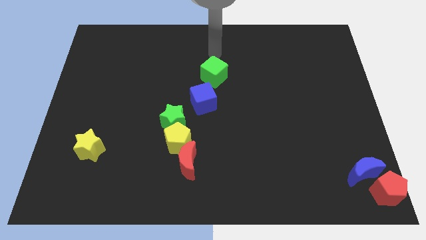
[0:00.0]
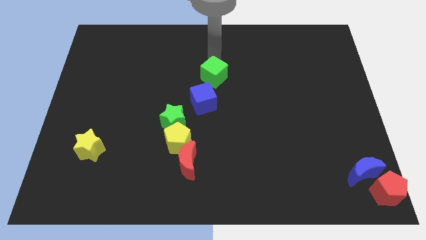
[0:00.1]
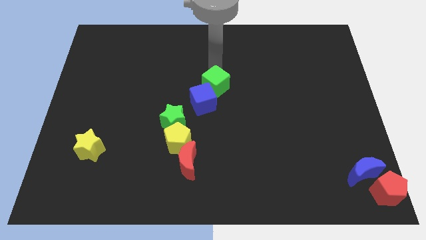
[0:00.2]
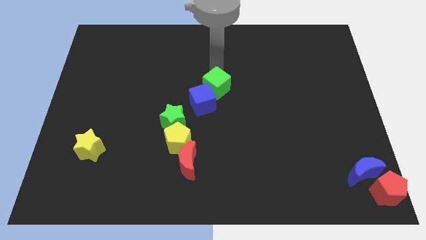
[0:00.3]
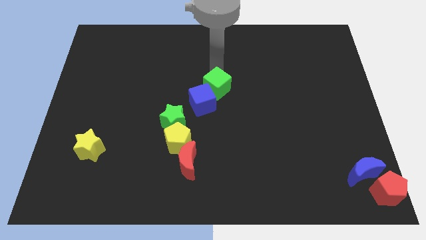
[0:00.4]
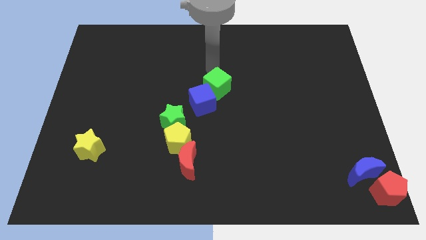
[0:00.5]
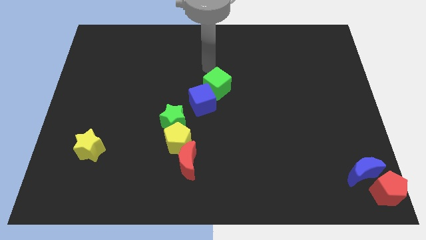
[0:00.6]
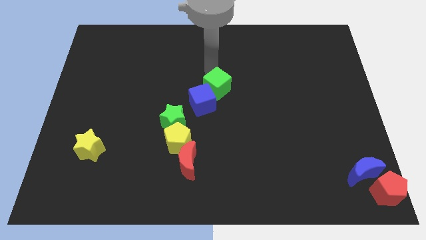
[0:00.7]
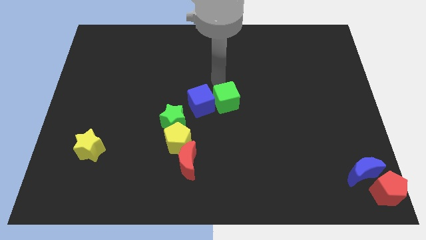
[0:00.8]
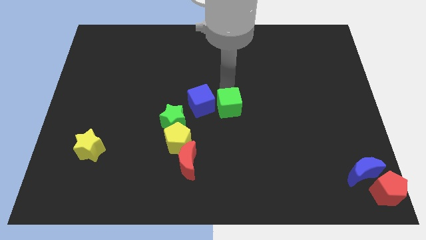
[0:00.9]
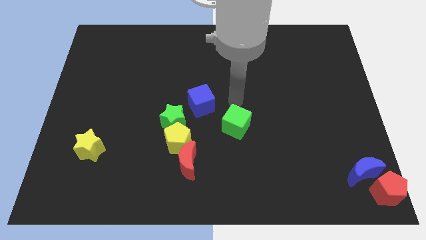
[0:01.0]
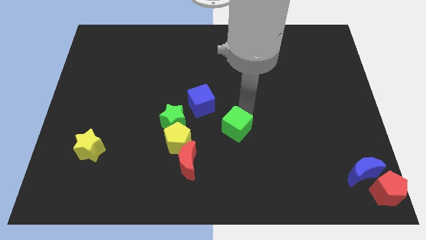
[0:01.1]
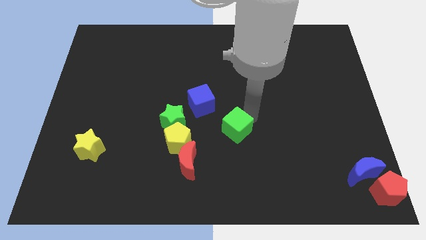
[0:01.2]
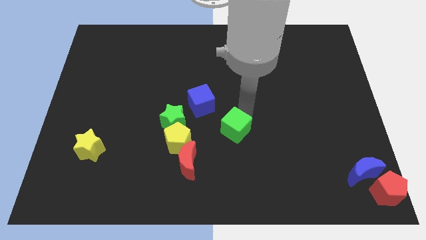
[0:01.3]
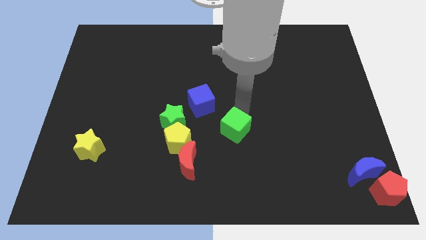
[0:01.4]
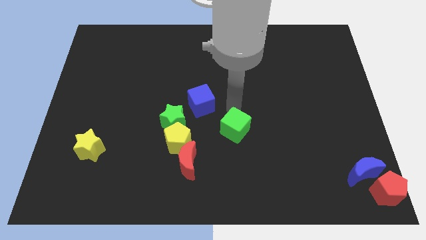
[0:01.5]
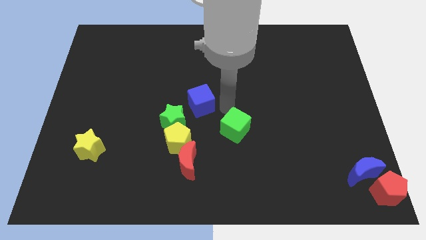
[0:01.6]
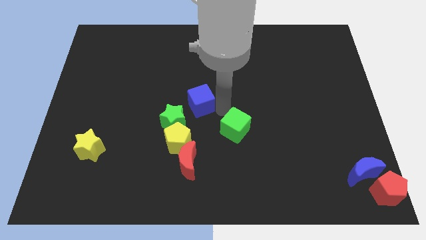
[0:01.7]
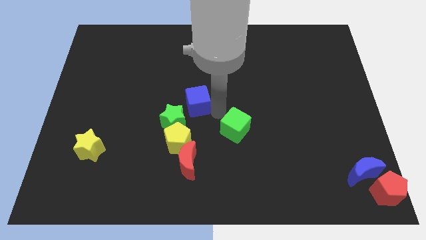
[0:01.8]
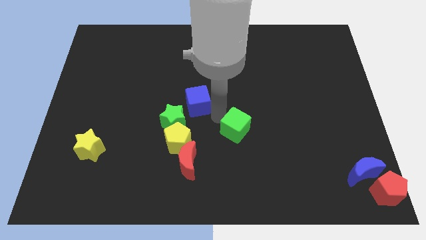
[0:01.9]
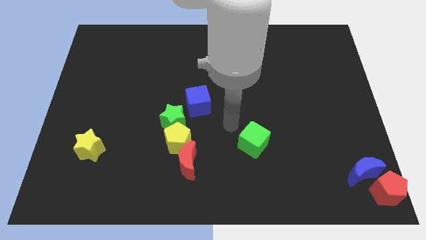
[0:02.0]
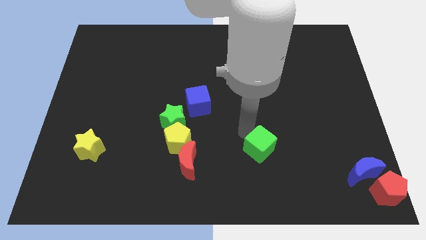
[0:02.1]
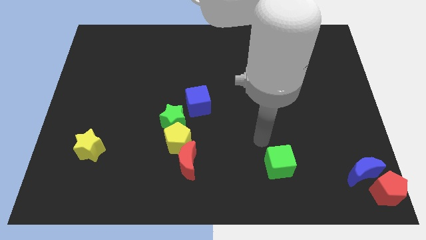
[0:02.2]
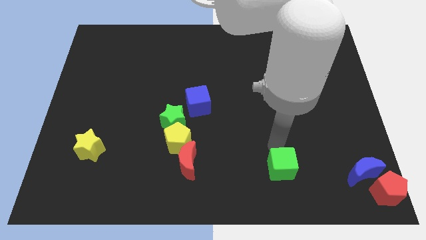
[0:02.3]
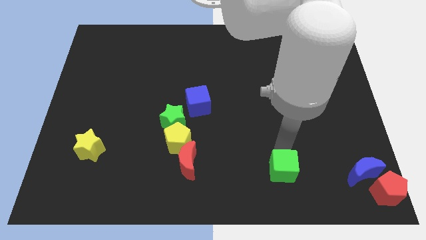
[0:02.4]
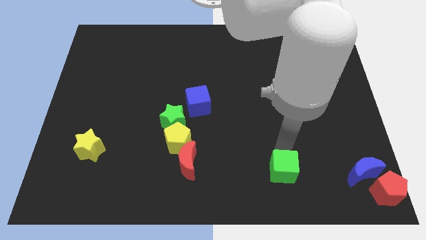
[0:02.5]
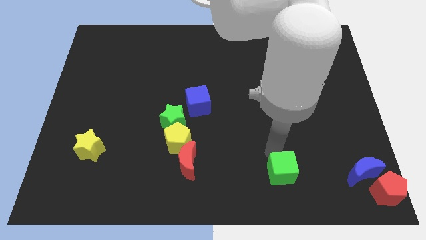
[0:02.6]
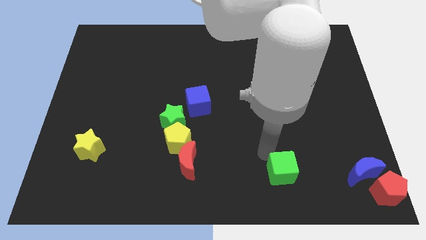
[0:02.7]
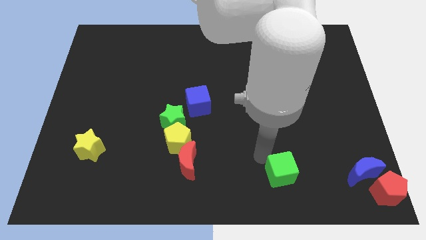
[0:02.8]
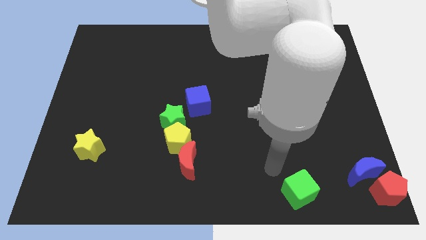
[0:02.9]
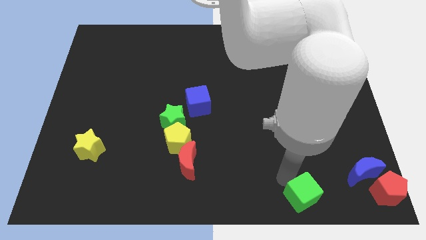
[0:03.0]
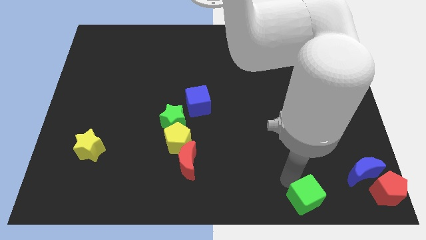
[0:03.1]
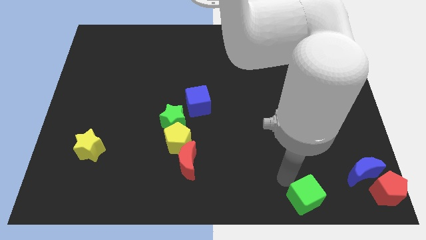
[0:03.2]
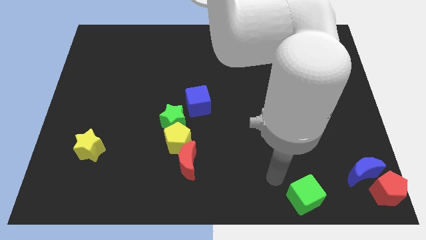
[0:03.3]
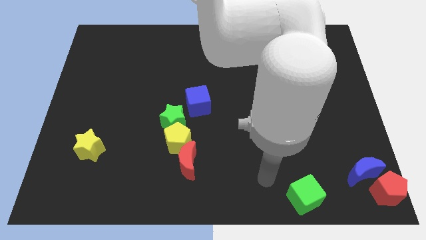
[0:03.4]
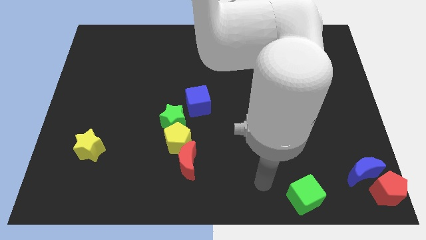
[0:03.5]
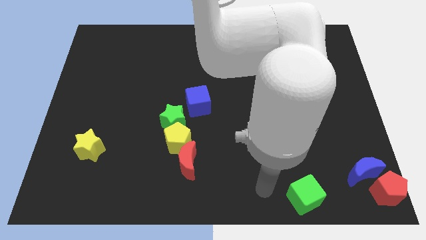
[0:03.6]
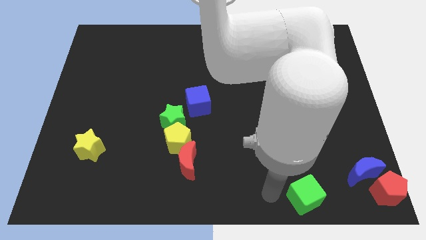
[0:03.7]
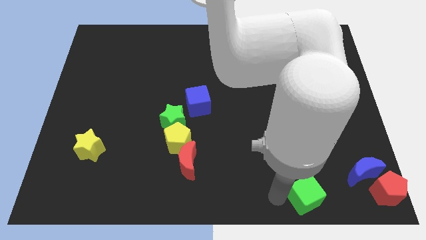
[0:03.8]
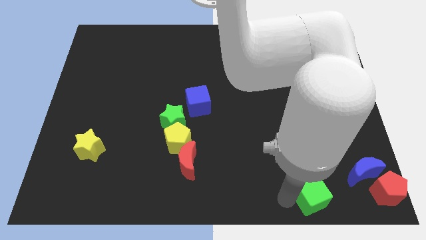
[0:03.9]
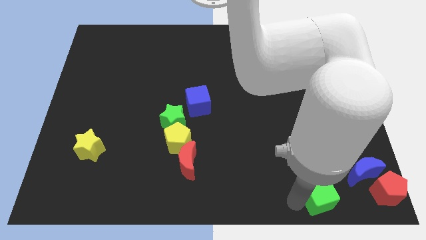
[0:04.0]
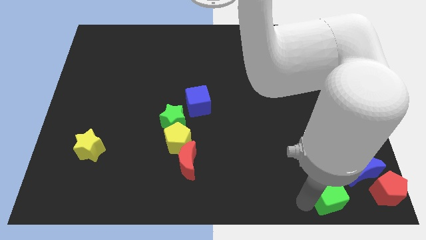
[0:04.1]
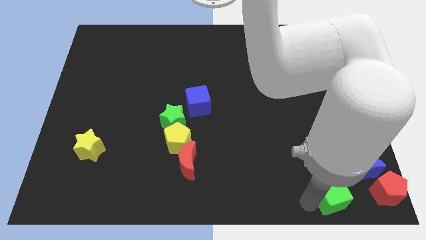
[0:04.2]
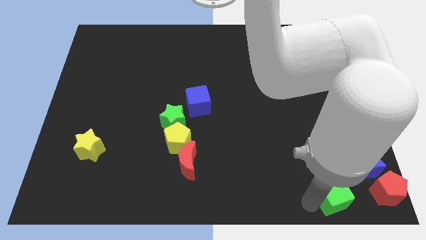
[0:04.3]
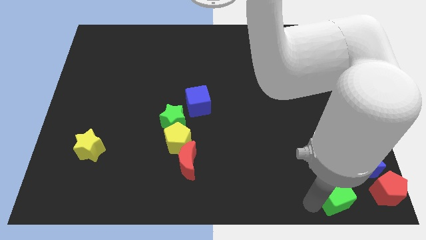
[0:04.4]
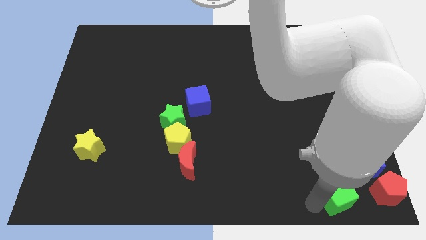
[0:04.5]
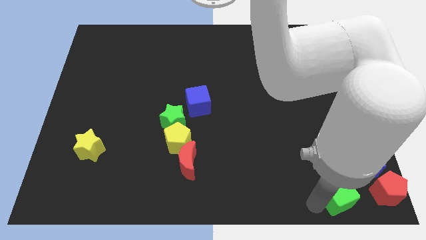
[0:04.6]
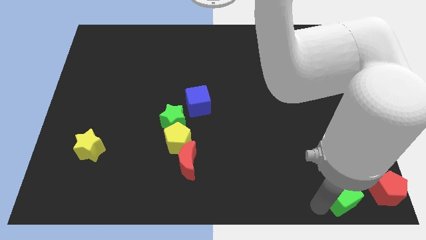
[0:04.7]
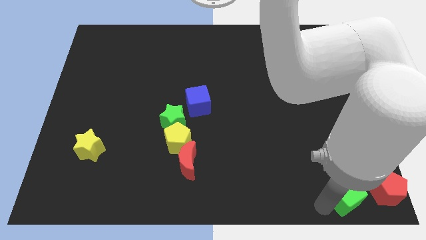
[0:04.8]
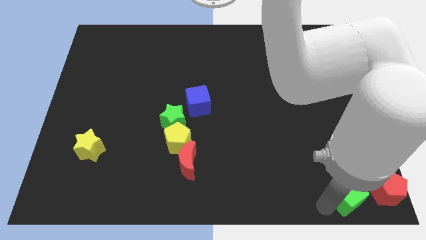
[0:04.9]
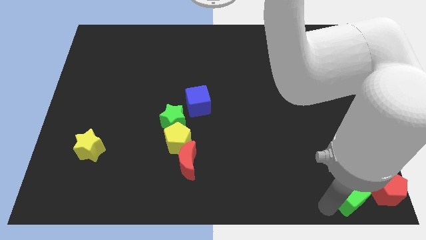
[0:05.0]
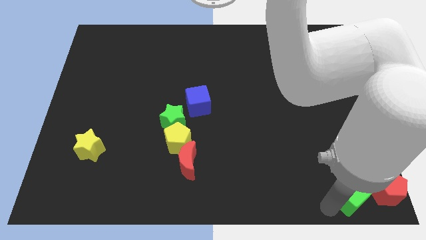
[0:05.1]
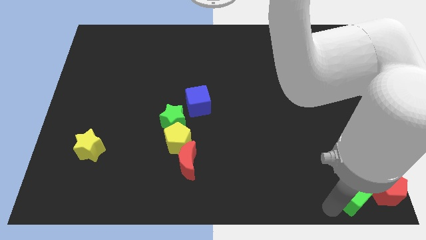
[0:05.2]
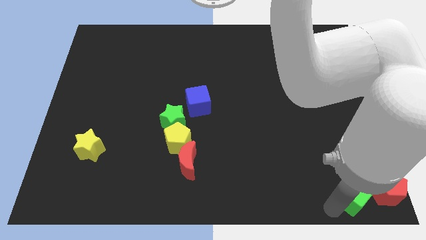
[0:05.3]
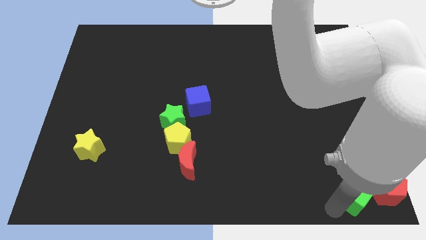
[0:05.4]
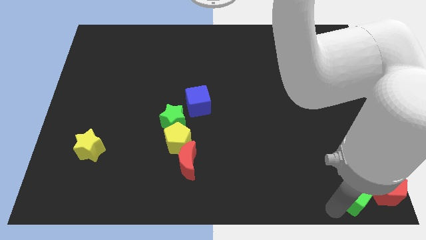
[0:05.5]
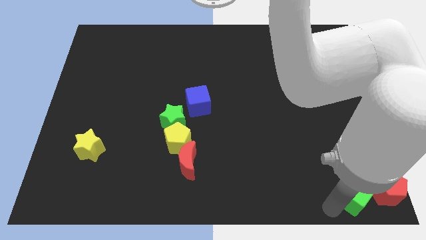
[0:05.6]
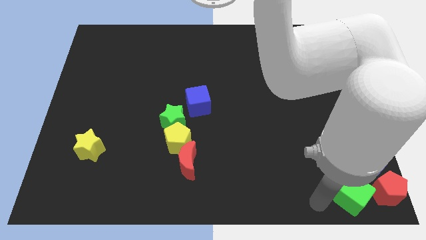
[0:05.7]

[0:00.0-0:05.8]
place green cube to the left of the red pentagon

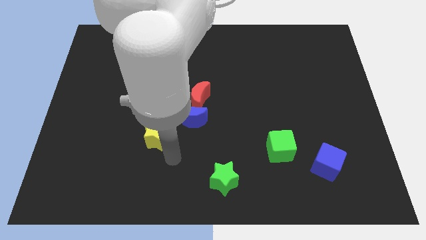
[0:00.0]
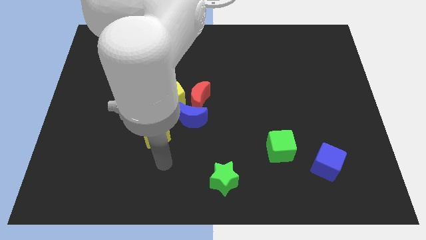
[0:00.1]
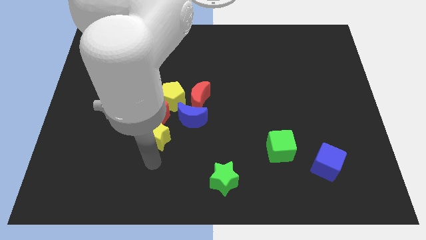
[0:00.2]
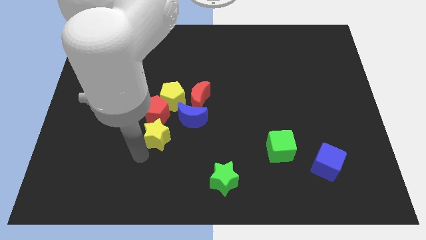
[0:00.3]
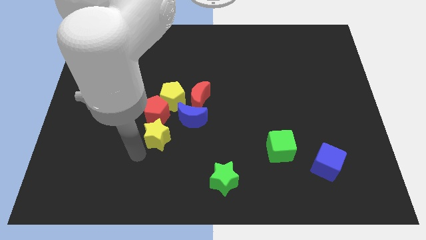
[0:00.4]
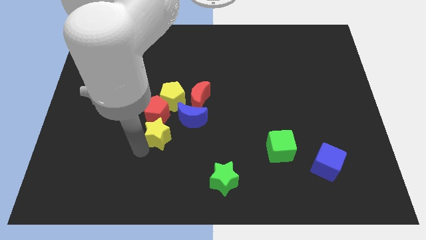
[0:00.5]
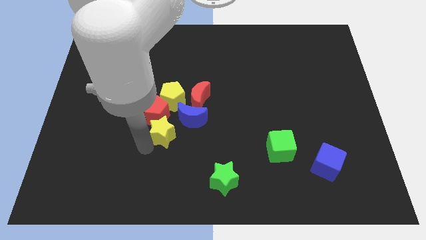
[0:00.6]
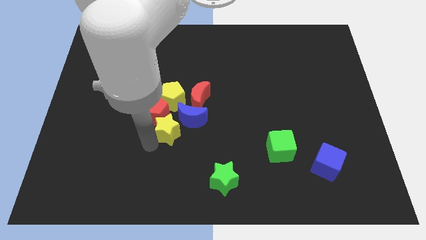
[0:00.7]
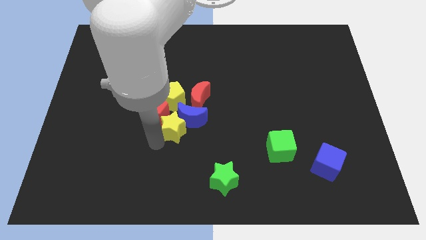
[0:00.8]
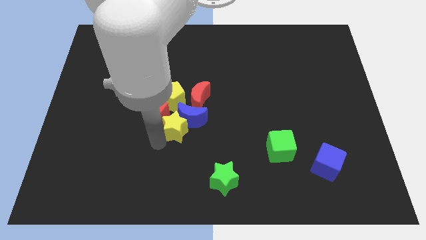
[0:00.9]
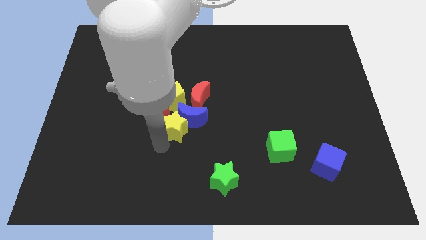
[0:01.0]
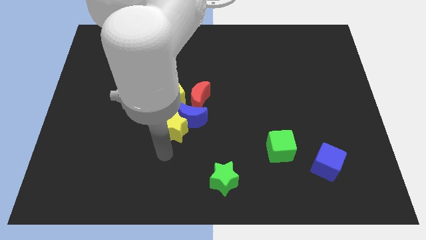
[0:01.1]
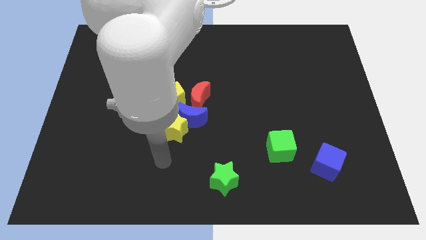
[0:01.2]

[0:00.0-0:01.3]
push the yellow star into the group of blocks

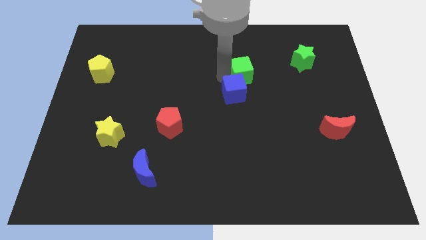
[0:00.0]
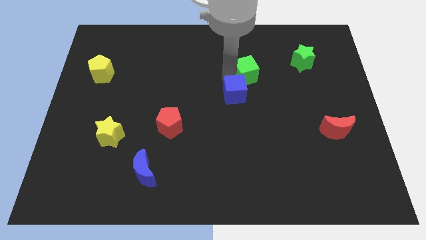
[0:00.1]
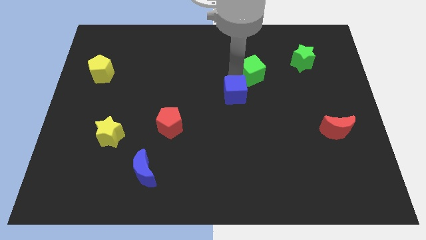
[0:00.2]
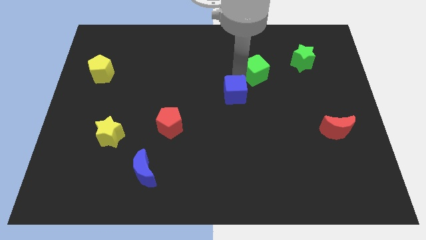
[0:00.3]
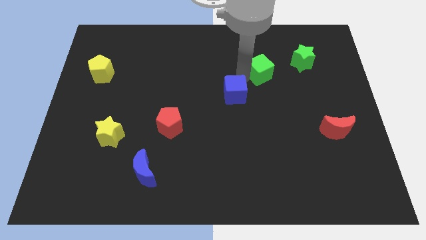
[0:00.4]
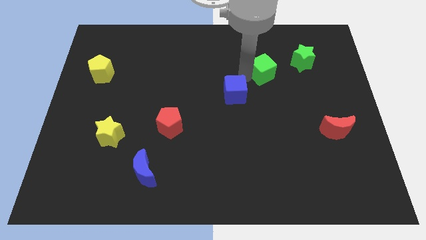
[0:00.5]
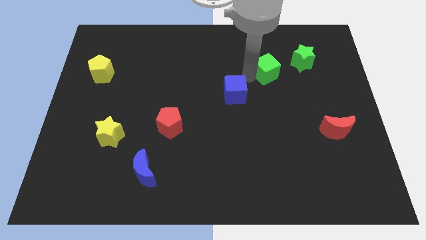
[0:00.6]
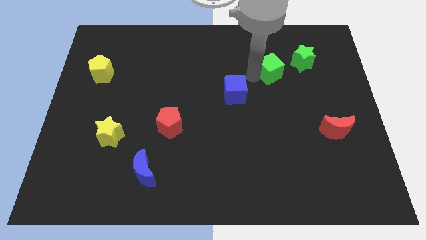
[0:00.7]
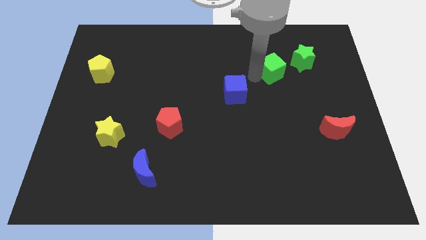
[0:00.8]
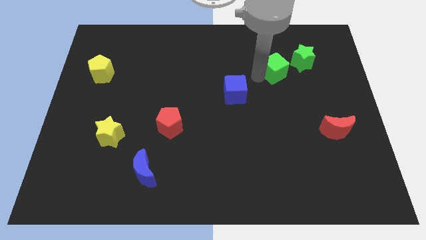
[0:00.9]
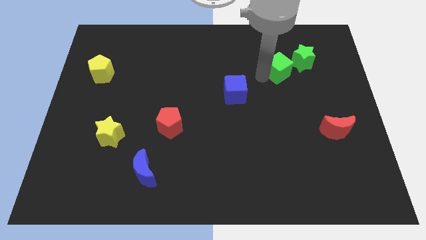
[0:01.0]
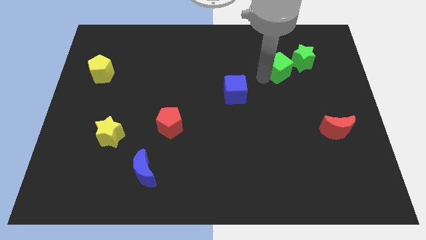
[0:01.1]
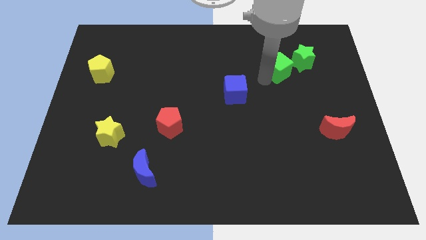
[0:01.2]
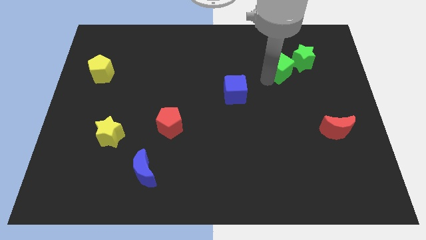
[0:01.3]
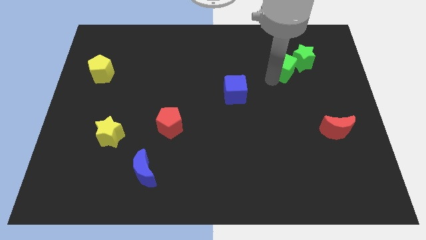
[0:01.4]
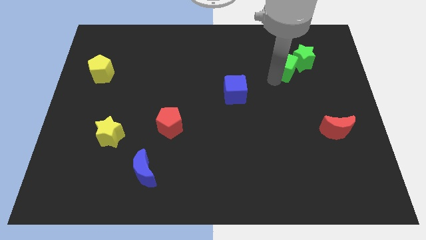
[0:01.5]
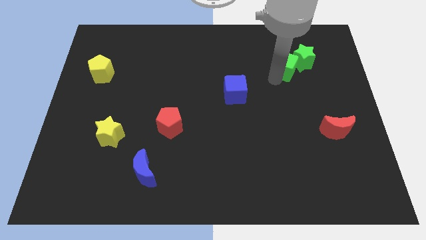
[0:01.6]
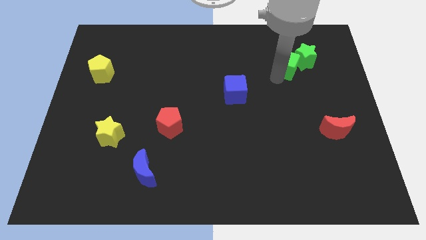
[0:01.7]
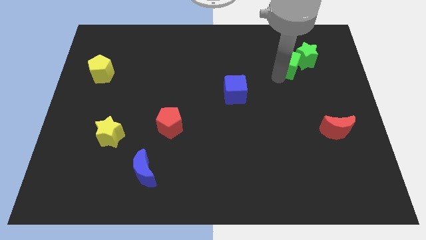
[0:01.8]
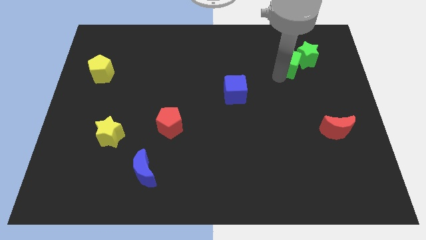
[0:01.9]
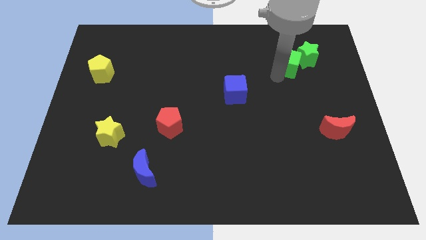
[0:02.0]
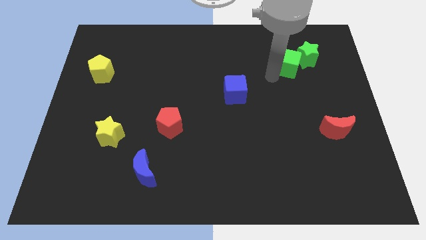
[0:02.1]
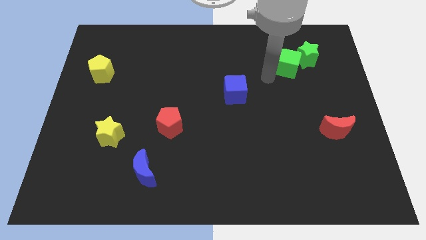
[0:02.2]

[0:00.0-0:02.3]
drag the green cube to the bottom left of green star
